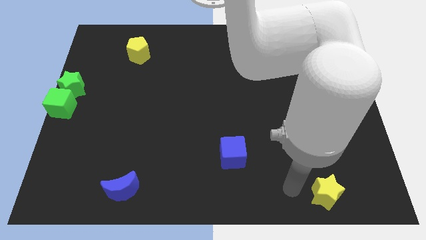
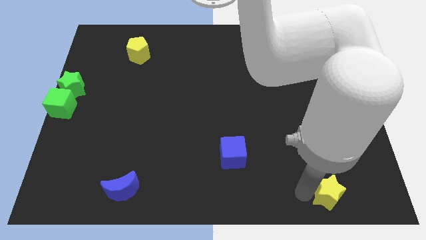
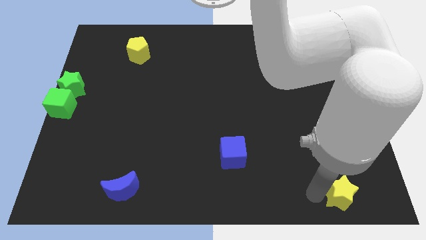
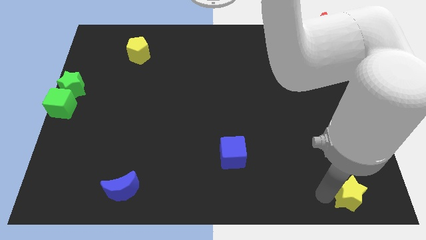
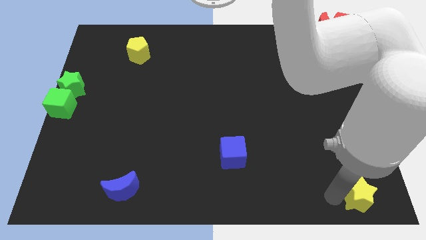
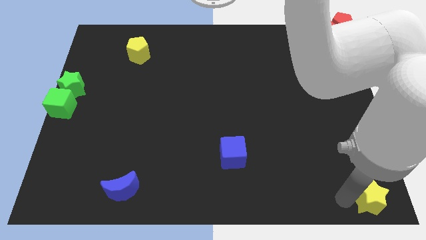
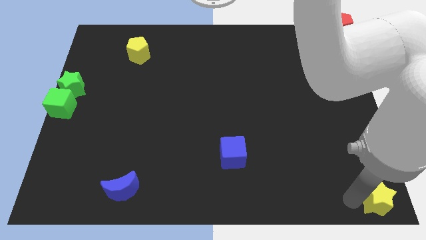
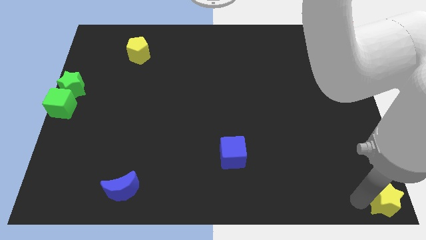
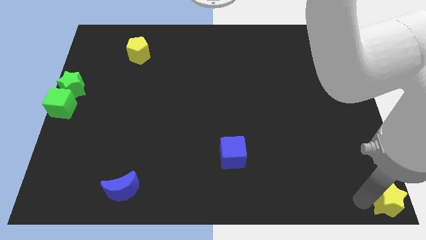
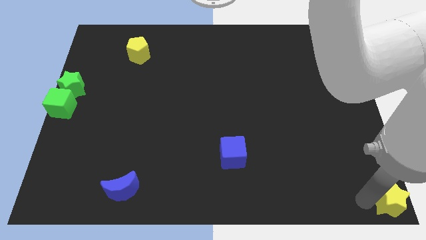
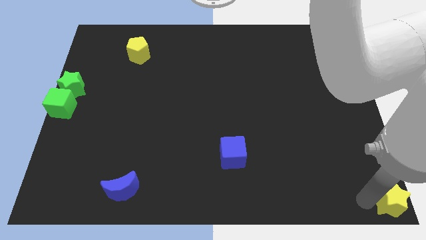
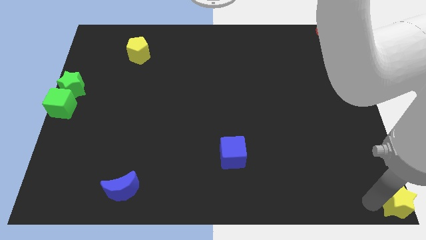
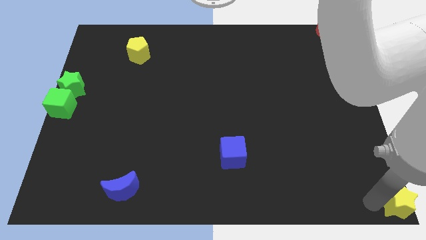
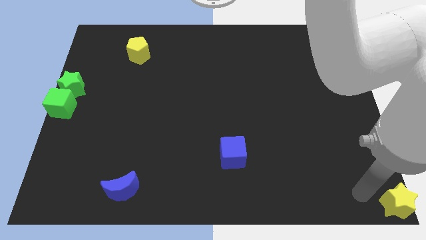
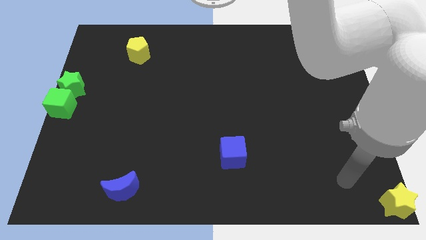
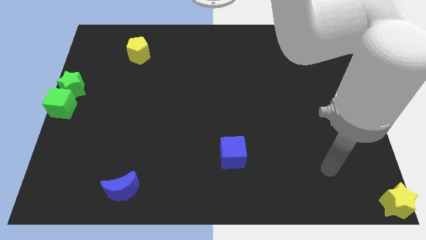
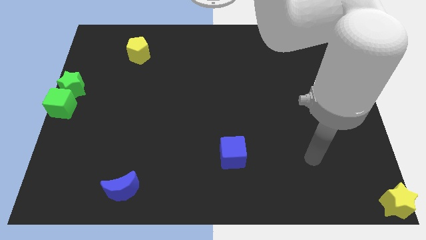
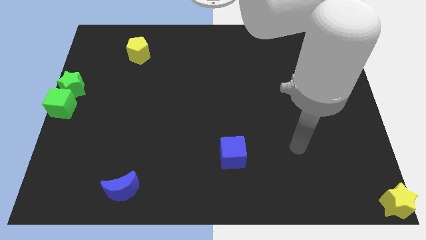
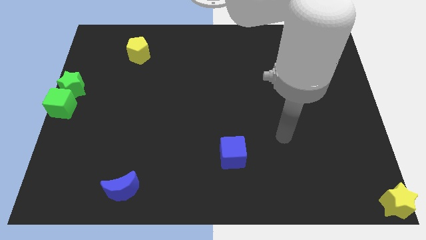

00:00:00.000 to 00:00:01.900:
move the yellow star to the bottom right corner

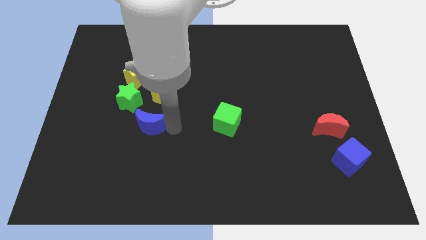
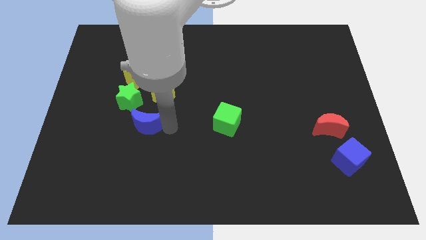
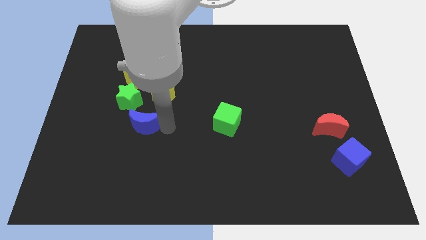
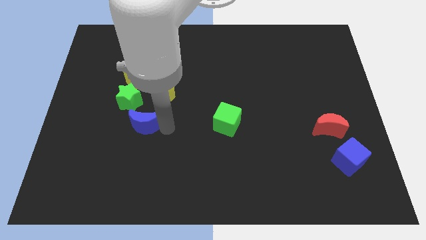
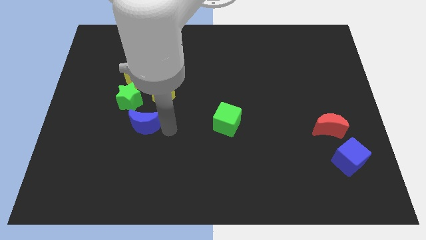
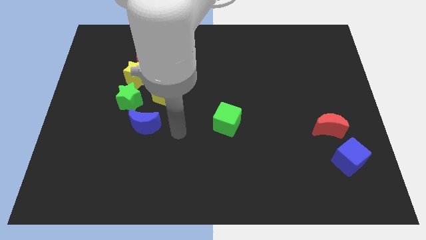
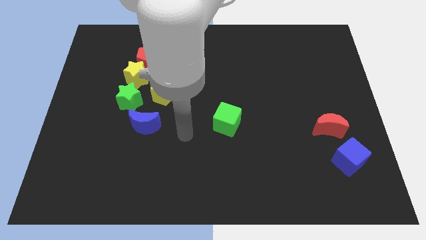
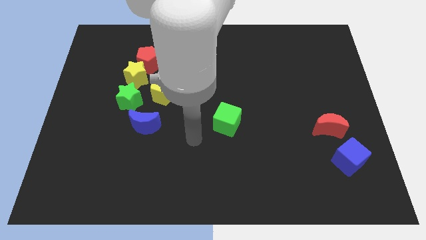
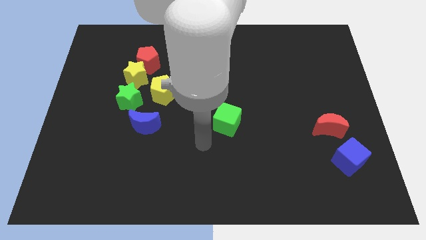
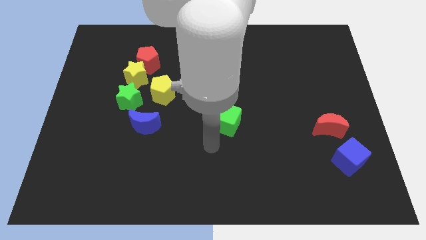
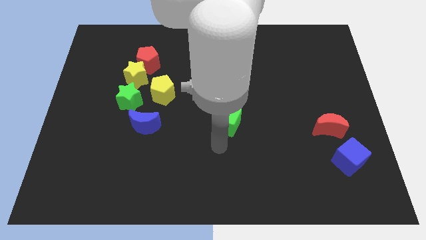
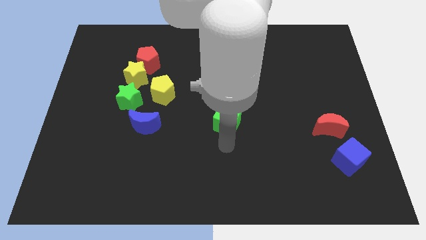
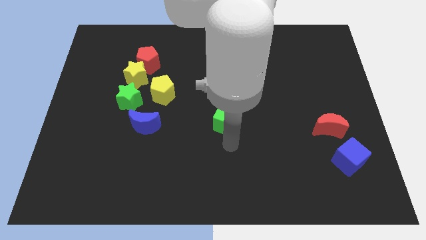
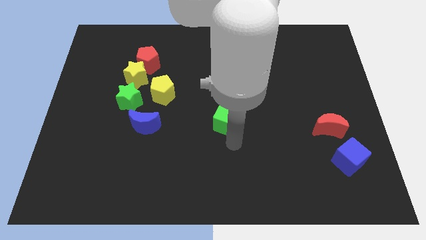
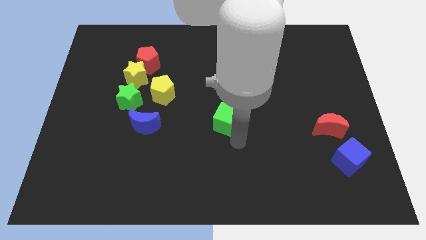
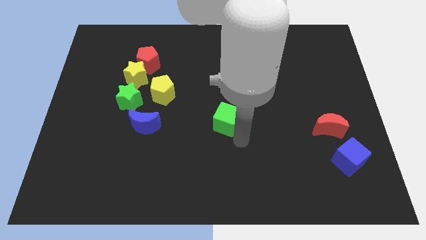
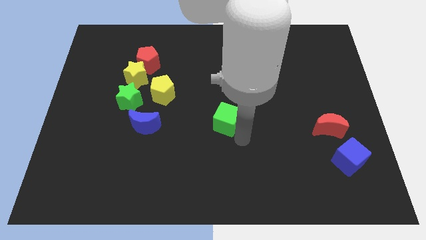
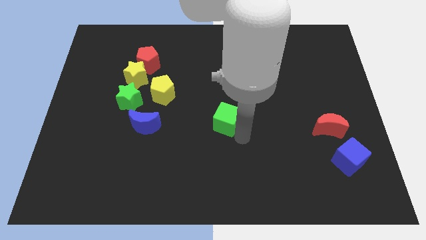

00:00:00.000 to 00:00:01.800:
move the arm away from the blue moon

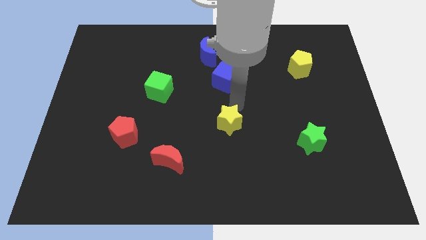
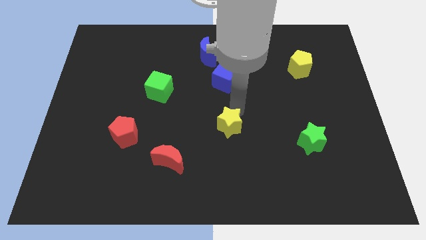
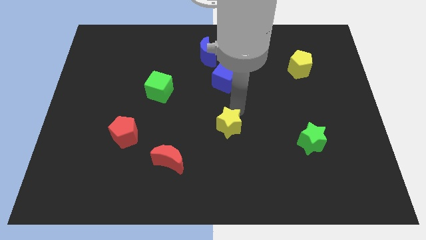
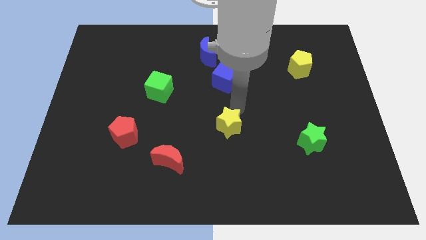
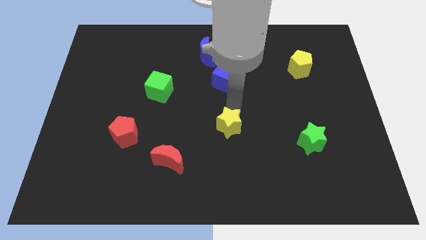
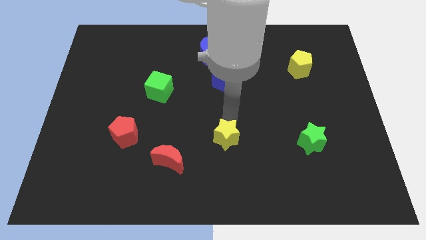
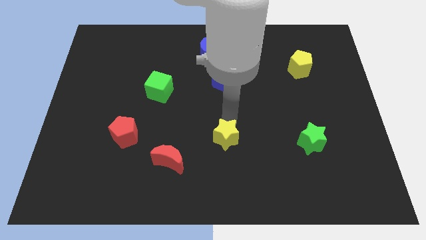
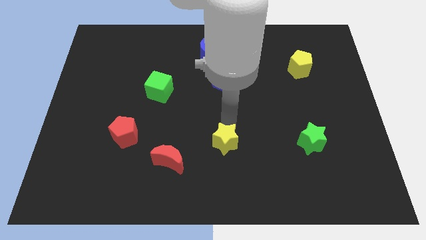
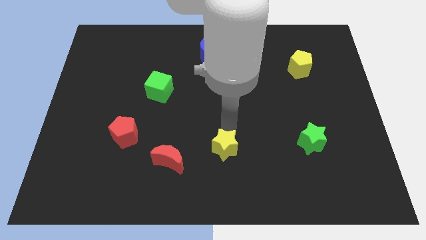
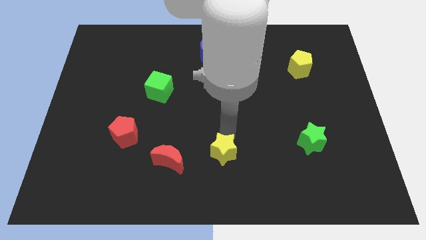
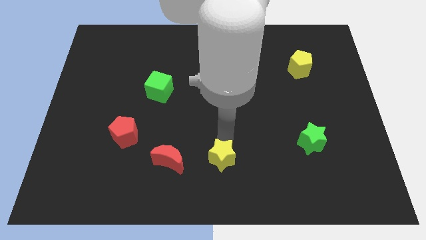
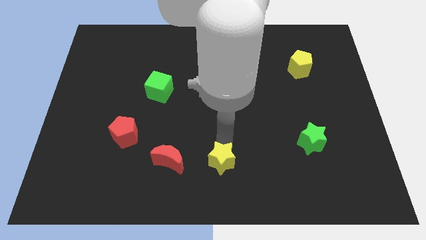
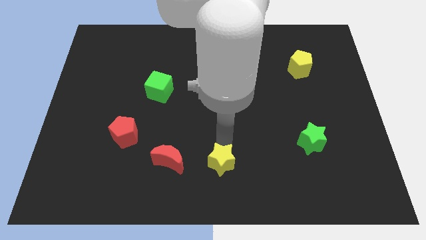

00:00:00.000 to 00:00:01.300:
place the yellow star to the right side of the red crescent

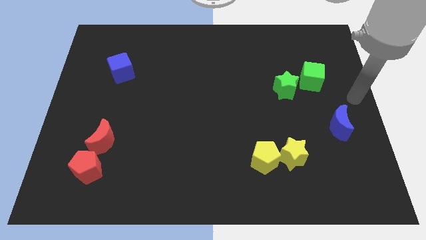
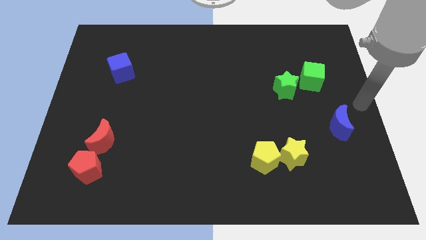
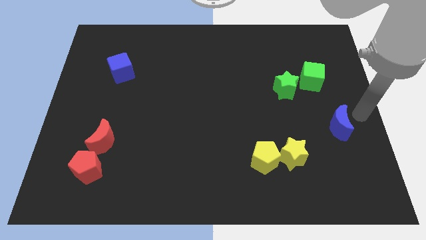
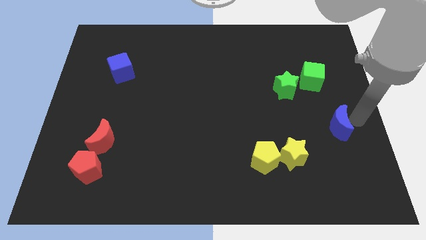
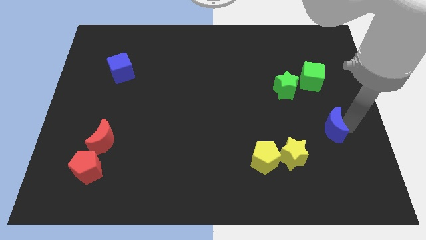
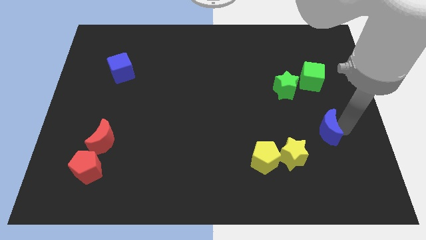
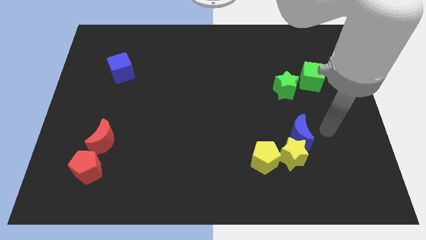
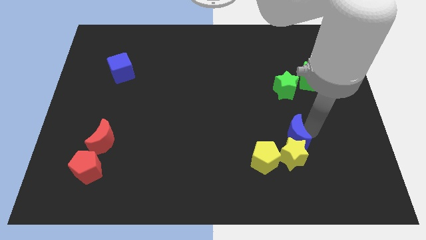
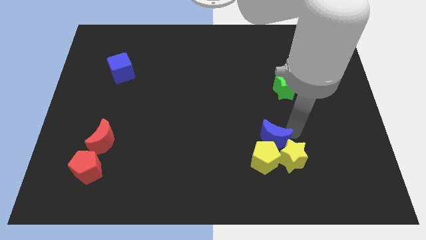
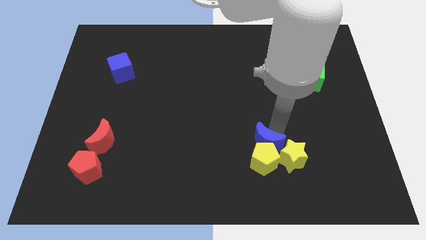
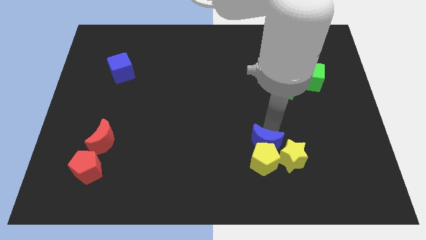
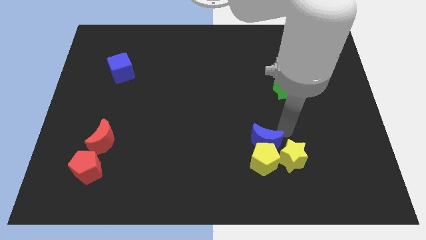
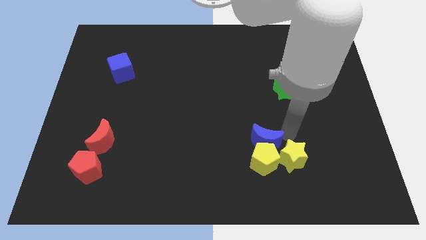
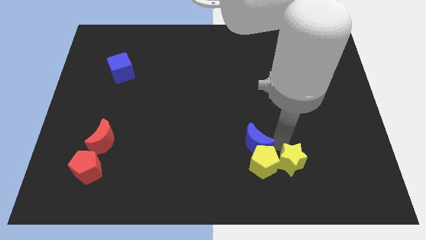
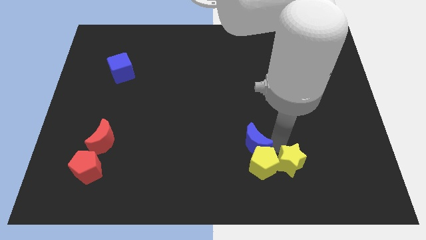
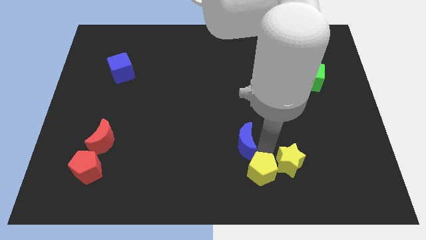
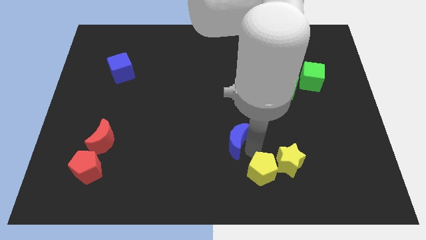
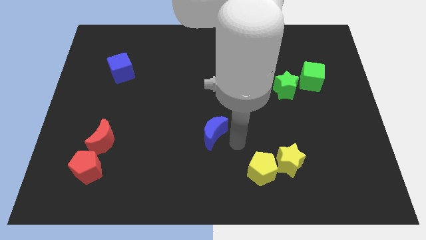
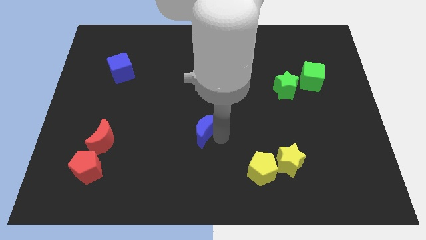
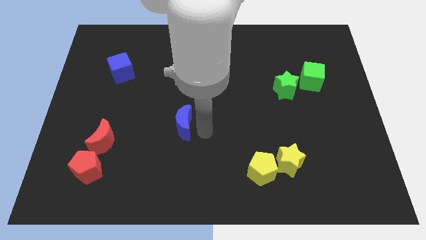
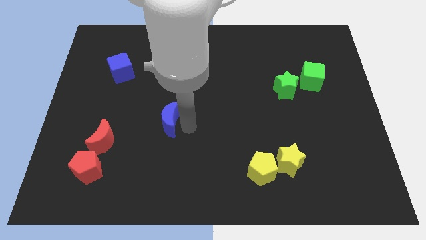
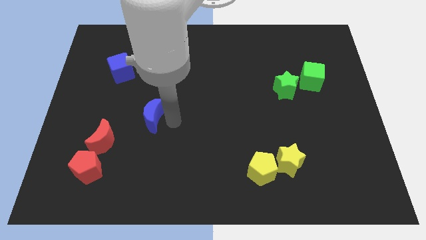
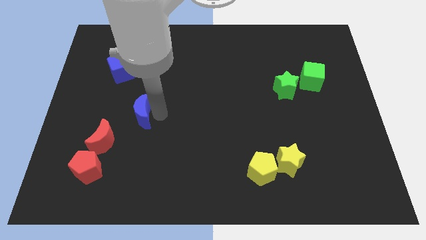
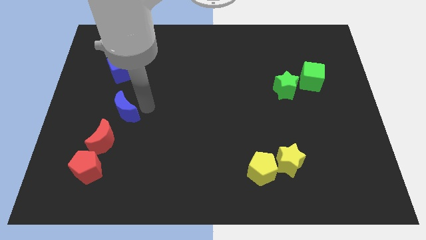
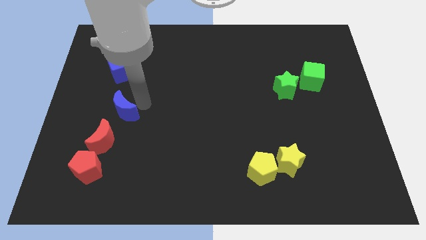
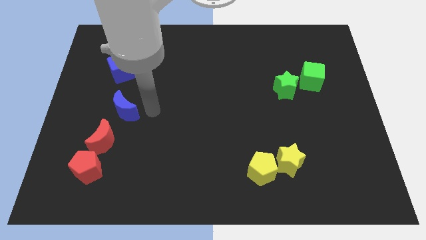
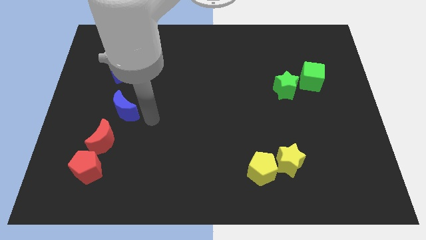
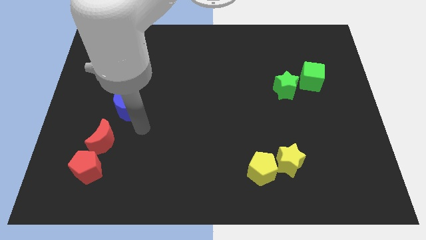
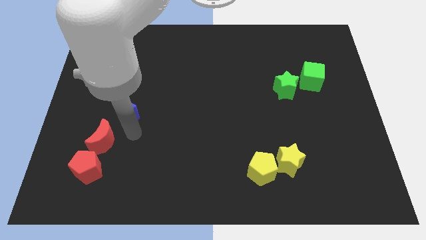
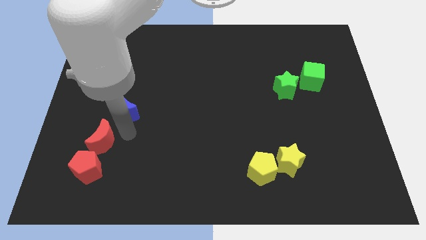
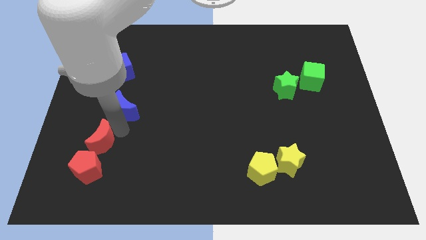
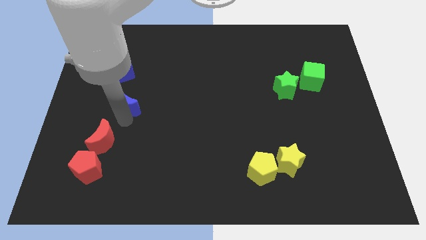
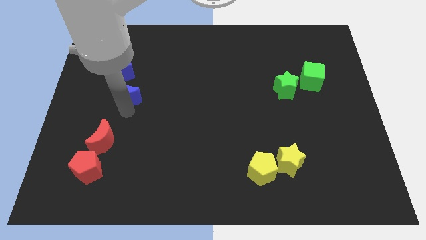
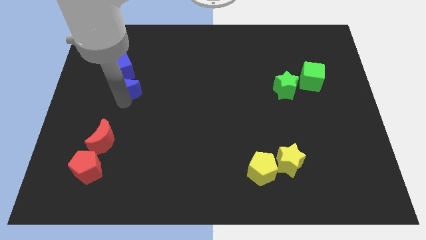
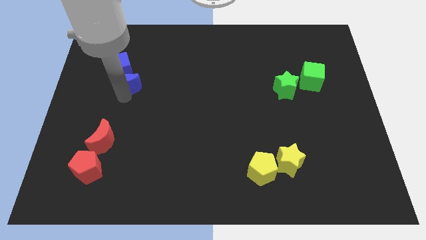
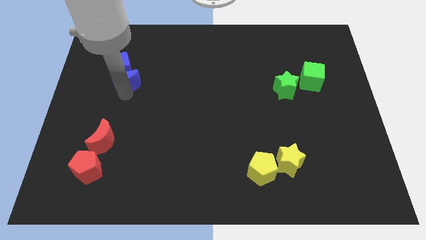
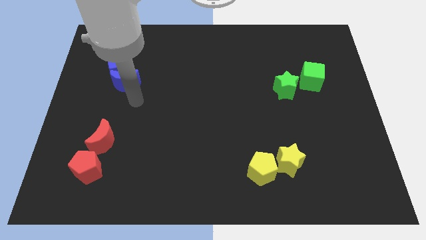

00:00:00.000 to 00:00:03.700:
move the blue moon into blue cube

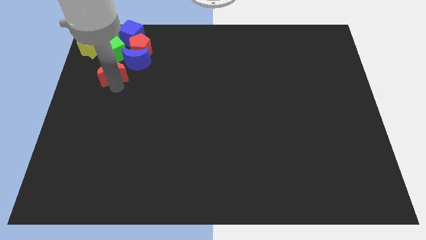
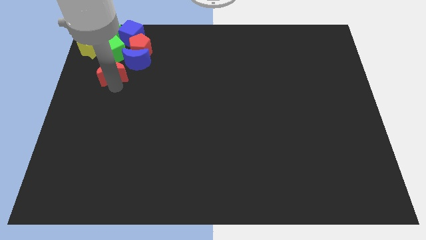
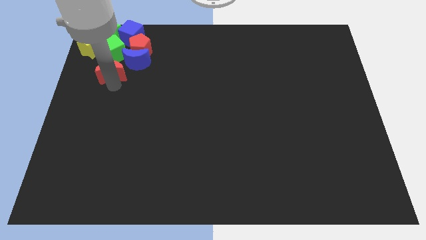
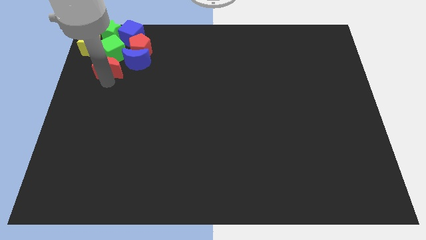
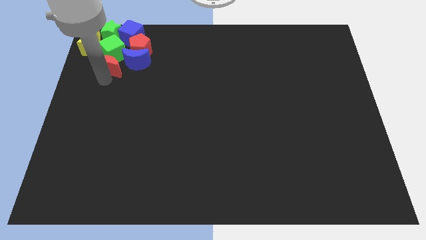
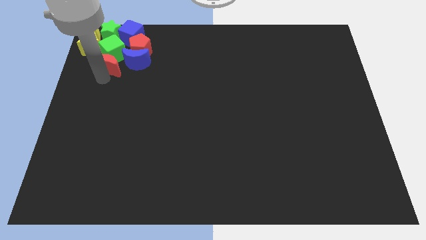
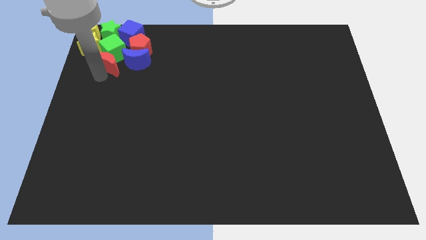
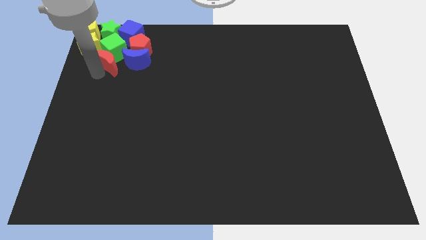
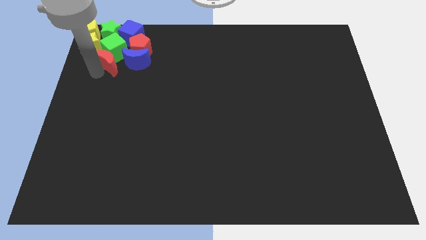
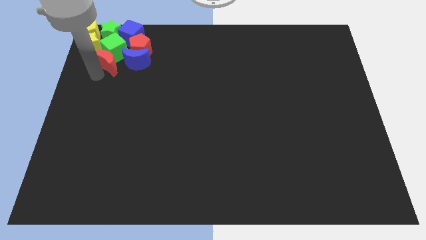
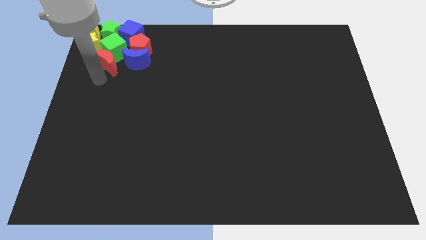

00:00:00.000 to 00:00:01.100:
push the red crescent into the green cube
